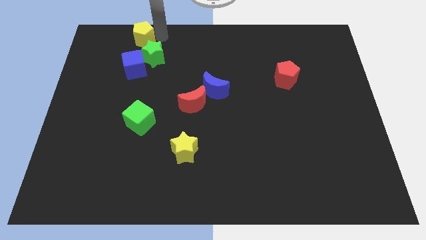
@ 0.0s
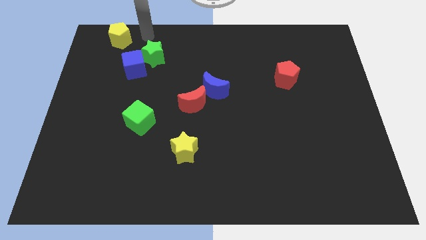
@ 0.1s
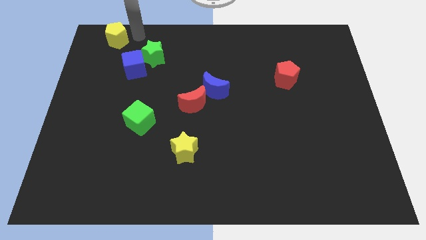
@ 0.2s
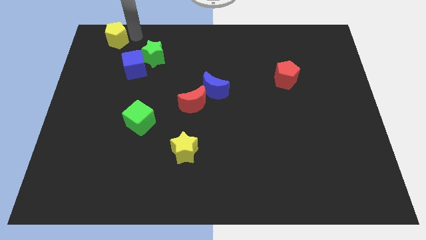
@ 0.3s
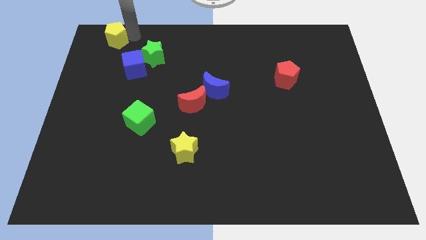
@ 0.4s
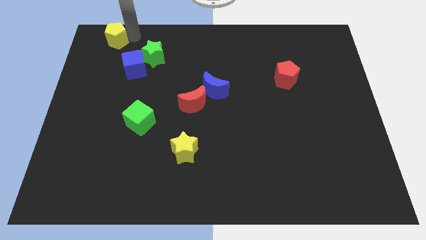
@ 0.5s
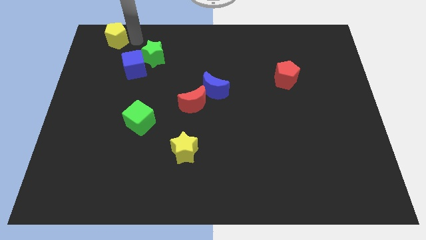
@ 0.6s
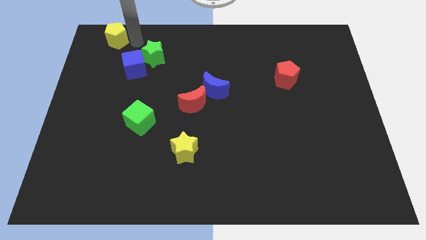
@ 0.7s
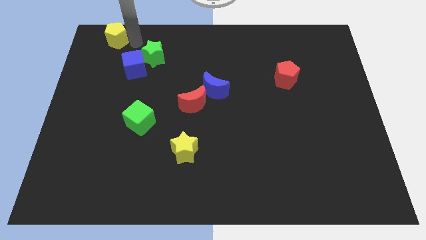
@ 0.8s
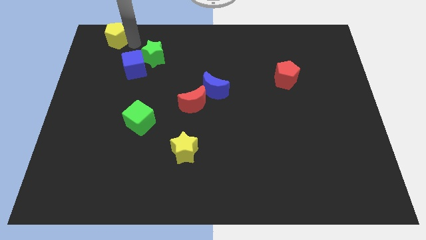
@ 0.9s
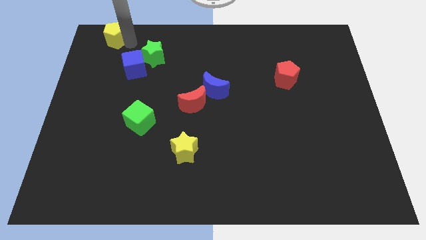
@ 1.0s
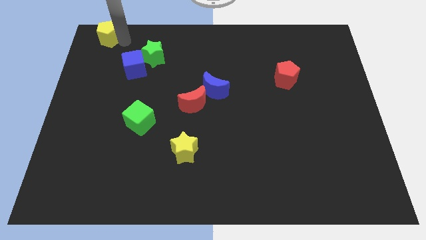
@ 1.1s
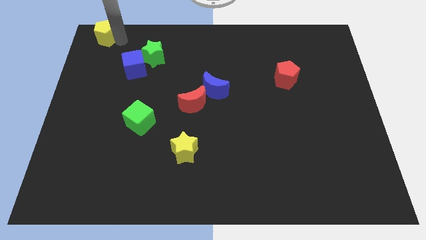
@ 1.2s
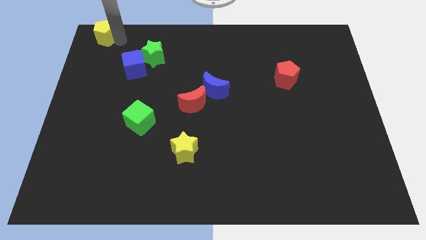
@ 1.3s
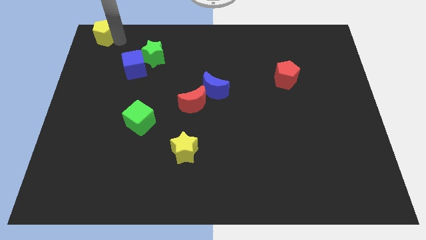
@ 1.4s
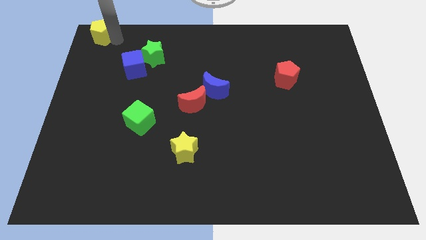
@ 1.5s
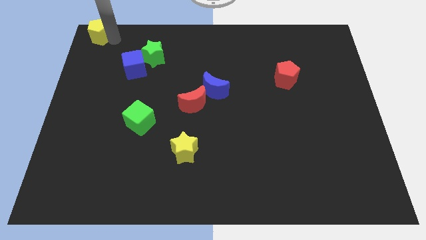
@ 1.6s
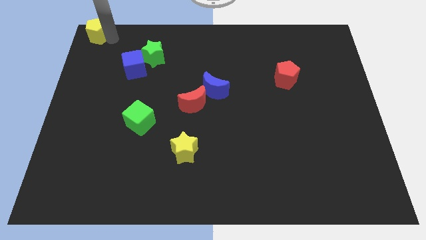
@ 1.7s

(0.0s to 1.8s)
move the yellow pentagon to the top left corner

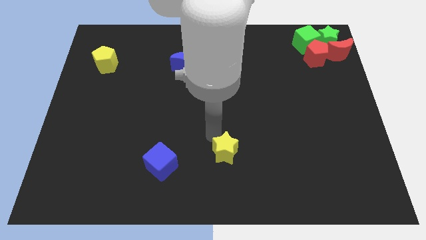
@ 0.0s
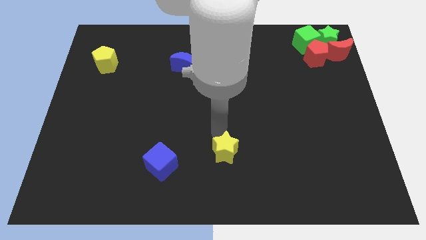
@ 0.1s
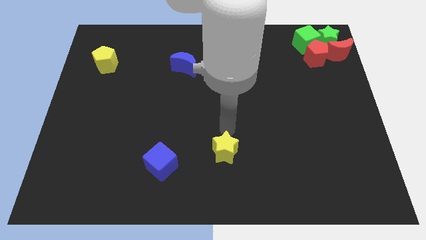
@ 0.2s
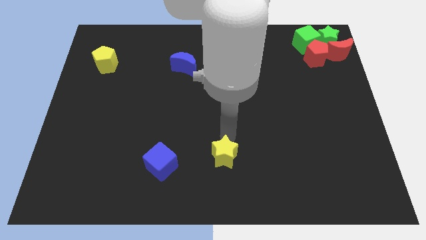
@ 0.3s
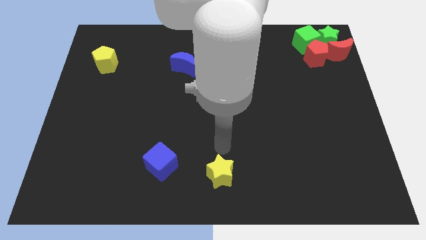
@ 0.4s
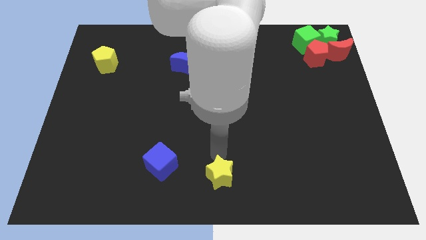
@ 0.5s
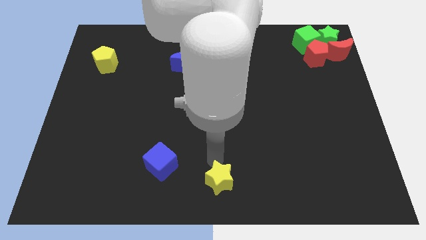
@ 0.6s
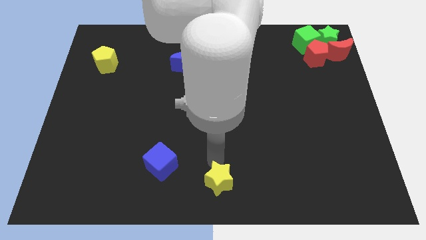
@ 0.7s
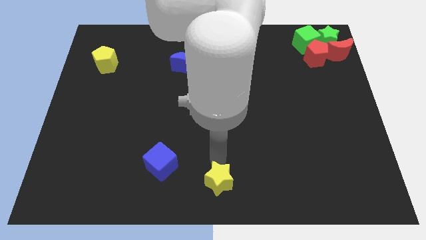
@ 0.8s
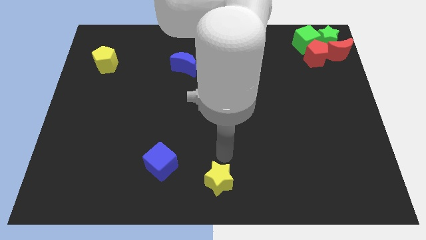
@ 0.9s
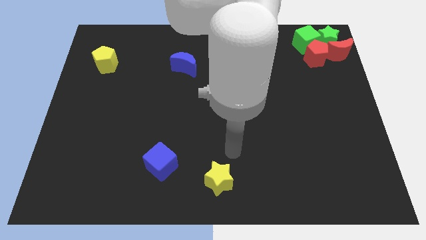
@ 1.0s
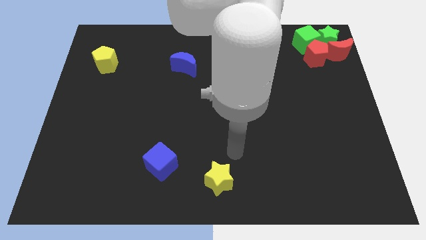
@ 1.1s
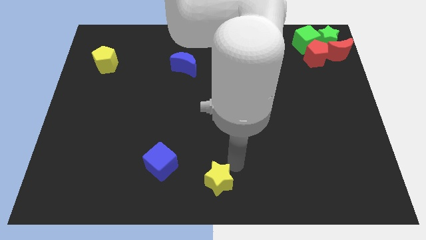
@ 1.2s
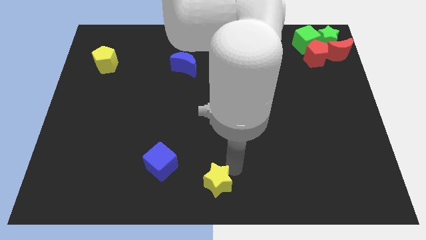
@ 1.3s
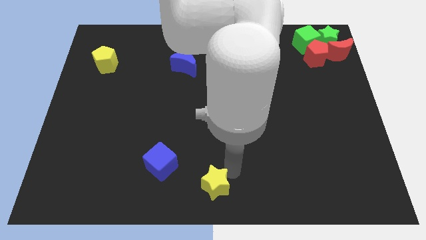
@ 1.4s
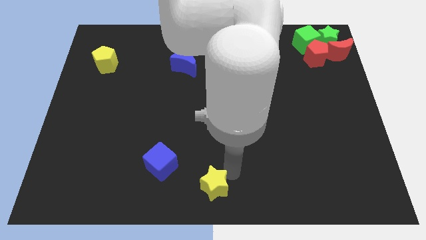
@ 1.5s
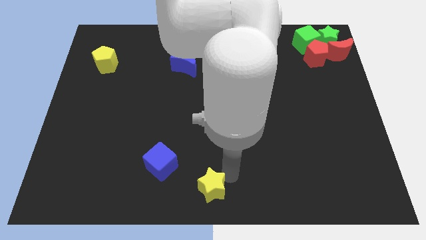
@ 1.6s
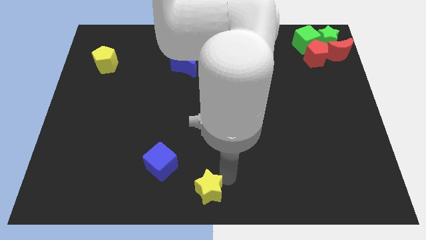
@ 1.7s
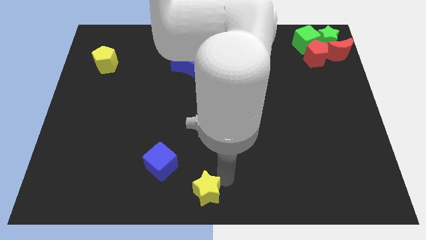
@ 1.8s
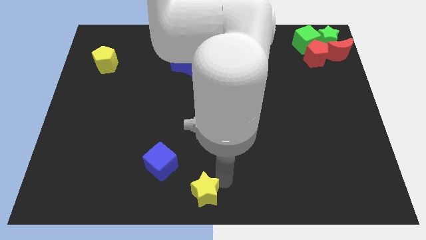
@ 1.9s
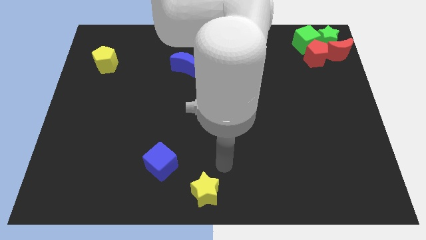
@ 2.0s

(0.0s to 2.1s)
move the yellow star to the bottom center of the board

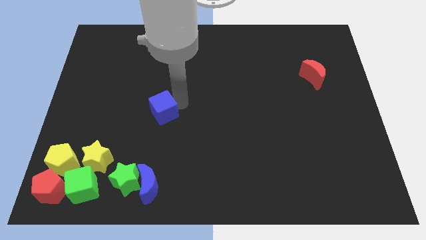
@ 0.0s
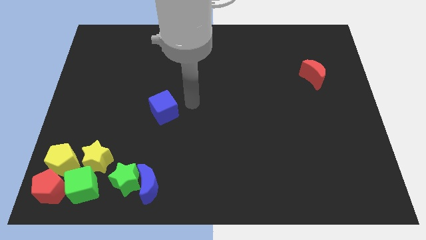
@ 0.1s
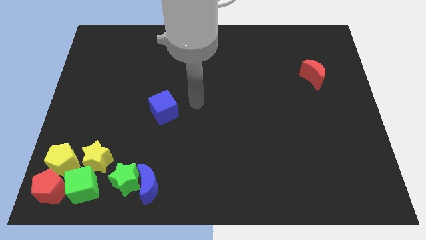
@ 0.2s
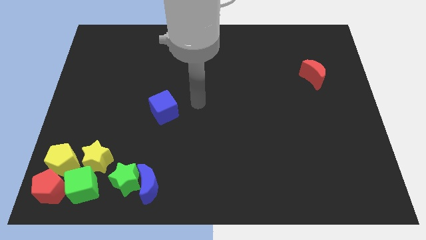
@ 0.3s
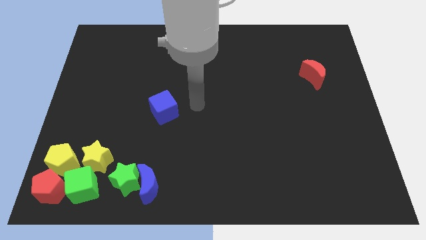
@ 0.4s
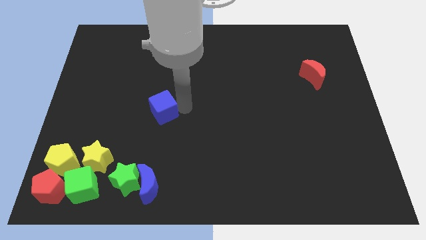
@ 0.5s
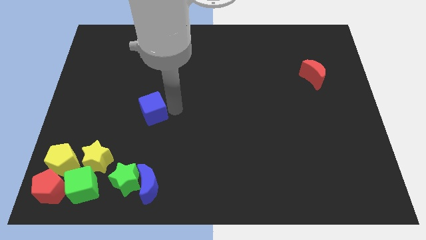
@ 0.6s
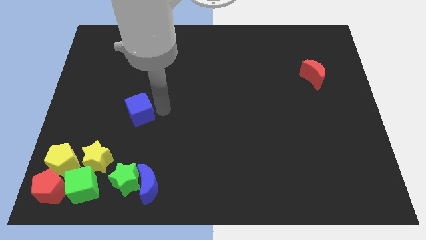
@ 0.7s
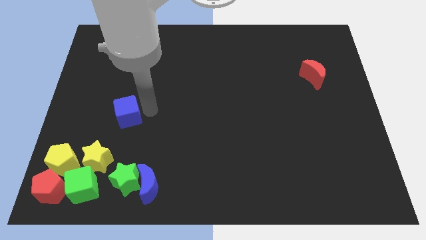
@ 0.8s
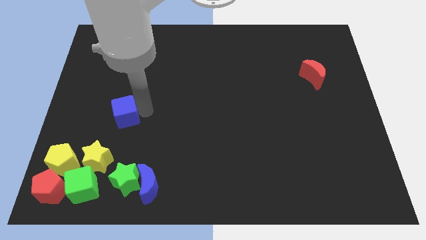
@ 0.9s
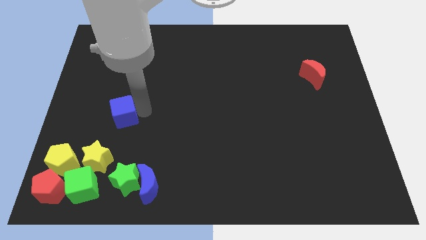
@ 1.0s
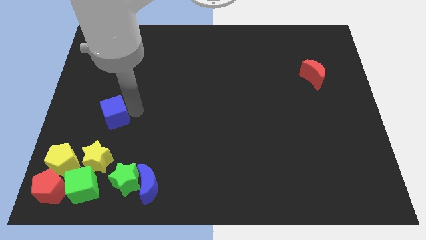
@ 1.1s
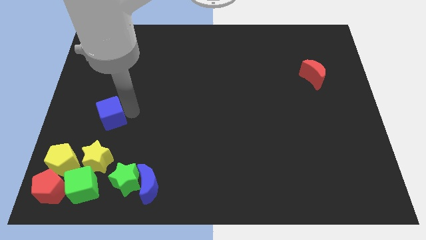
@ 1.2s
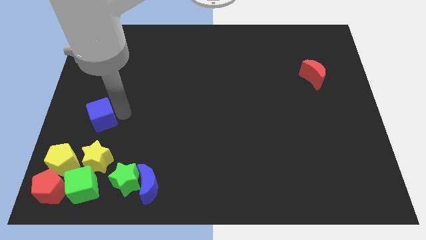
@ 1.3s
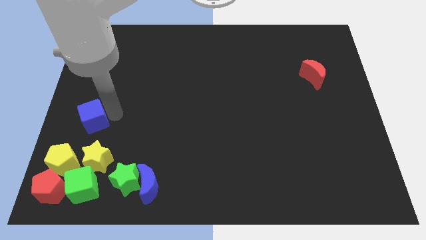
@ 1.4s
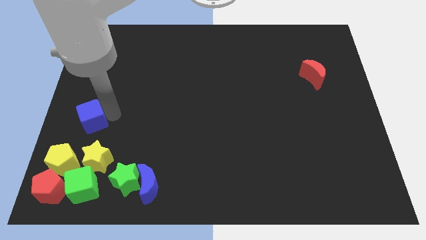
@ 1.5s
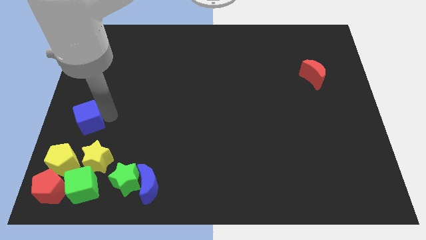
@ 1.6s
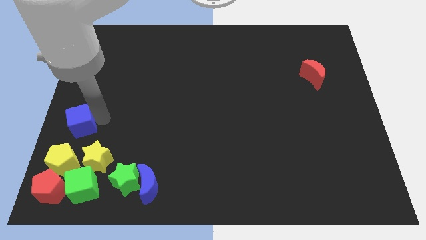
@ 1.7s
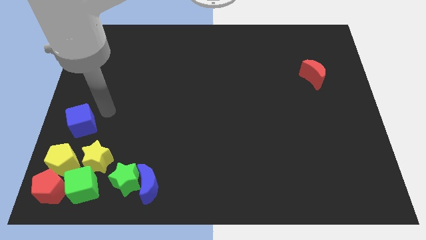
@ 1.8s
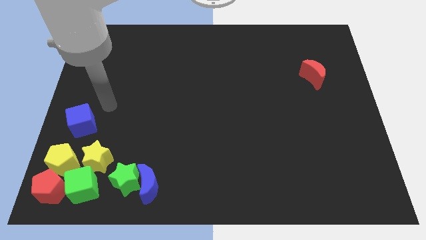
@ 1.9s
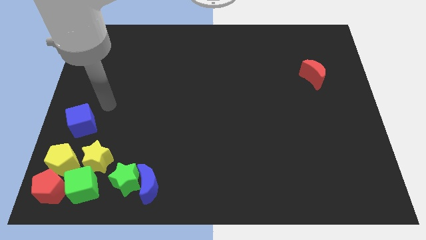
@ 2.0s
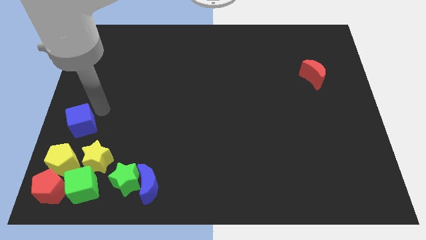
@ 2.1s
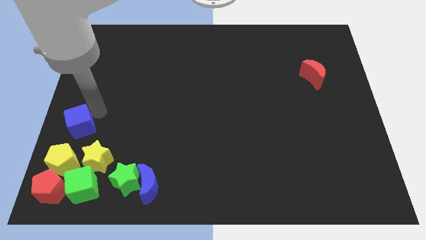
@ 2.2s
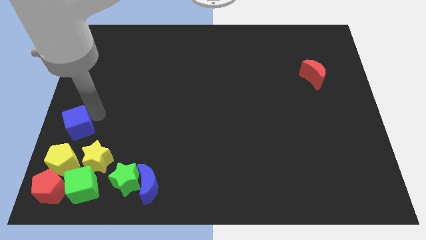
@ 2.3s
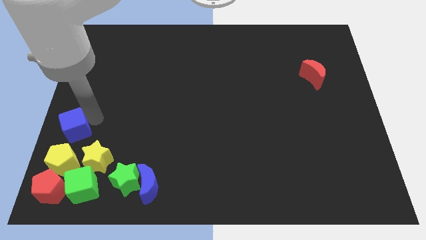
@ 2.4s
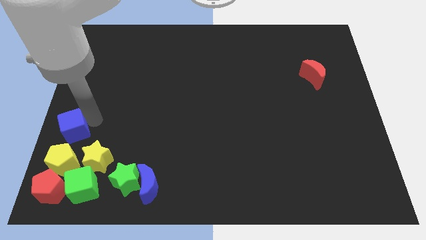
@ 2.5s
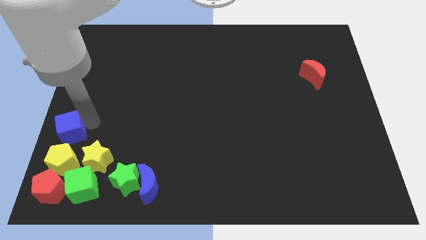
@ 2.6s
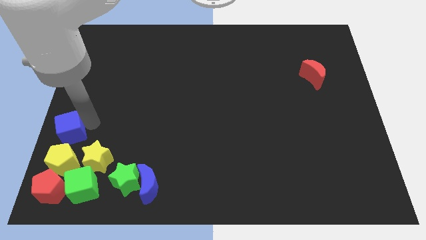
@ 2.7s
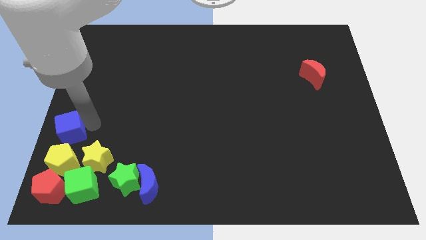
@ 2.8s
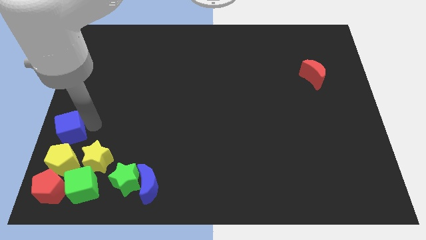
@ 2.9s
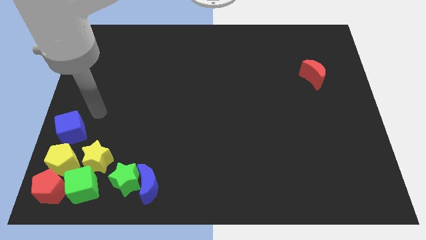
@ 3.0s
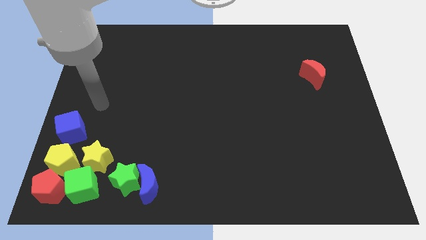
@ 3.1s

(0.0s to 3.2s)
place blue cube above yellow pentagon

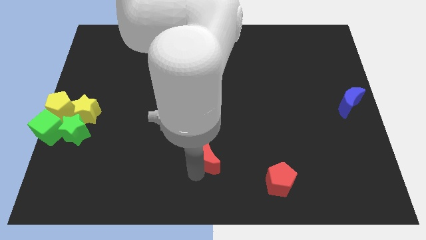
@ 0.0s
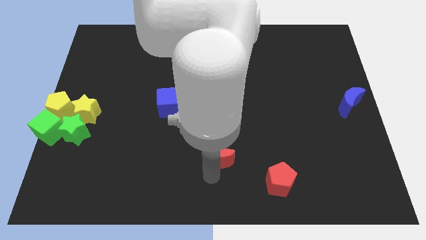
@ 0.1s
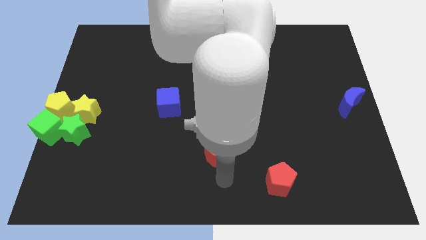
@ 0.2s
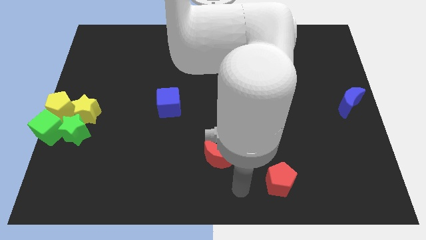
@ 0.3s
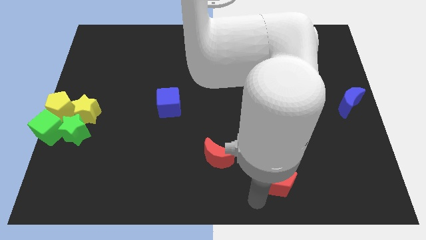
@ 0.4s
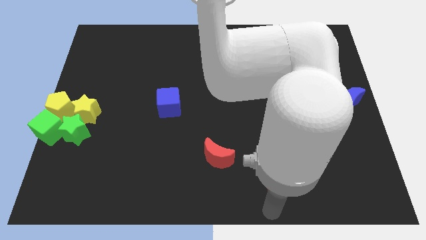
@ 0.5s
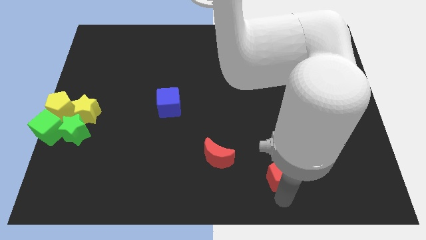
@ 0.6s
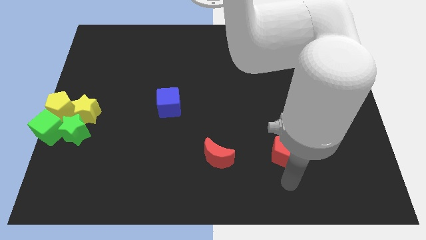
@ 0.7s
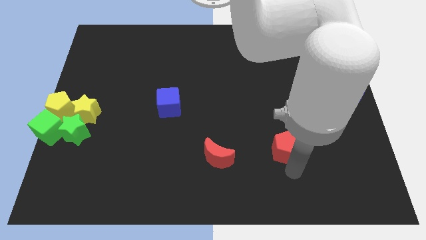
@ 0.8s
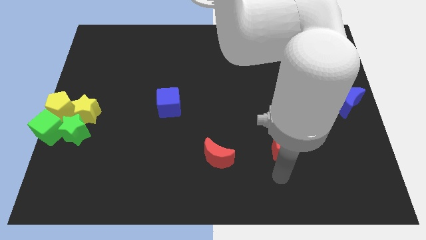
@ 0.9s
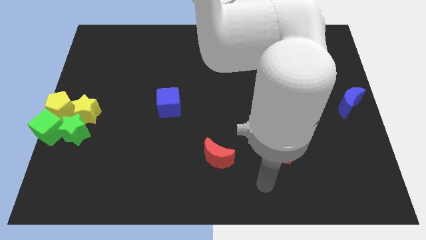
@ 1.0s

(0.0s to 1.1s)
slightly move the red pentagon parallel to the right side of the red crescent

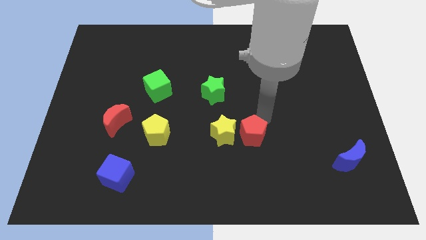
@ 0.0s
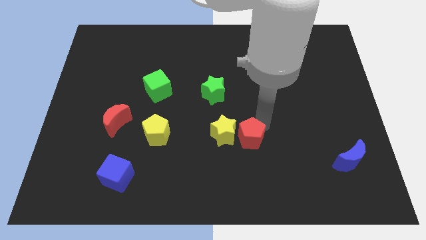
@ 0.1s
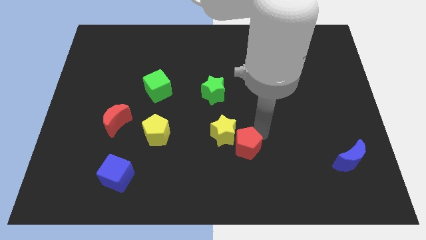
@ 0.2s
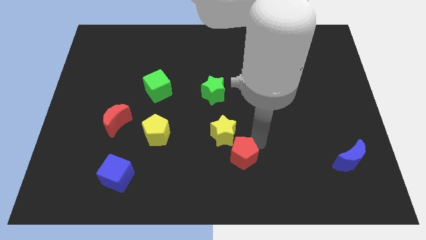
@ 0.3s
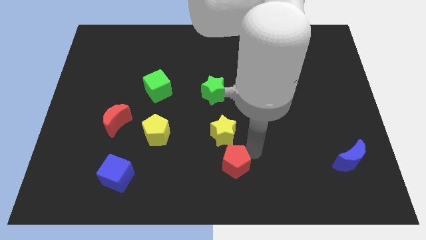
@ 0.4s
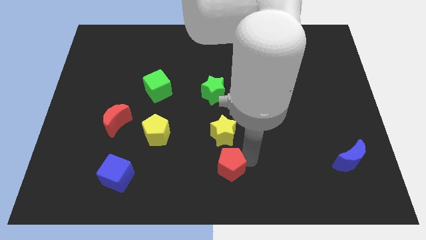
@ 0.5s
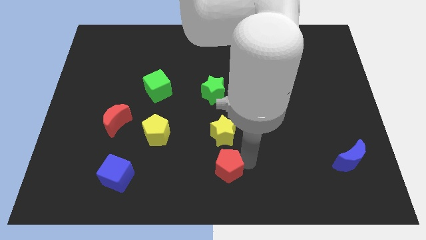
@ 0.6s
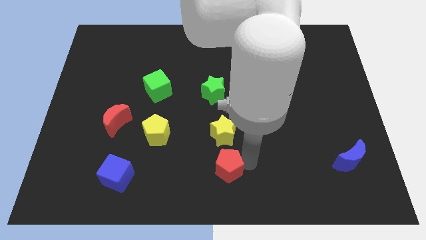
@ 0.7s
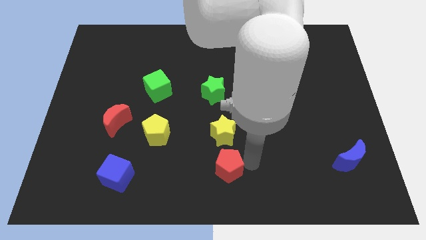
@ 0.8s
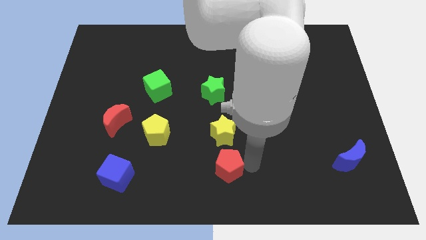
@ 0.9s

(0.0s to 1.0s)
place the red pentagon at the bottom of the yellow star
